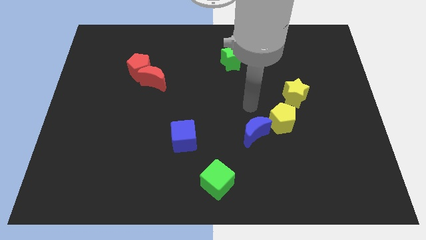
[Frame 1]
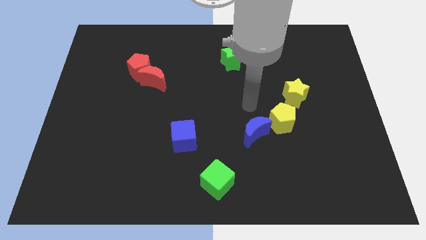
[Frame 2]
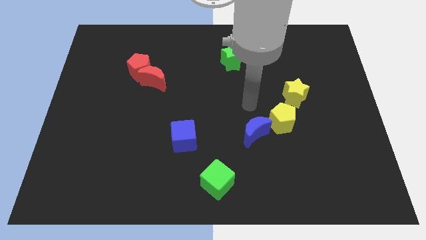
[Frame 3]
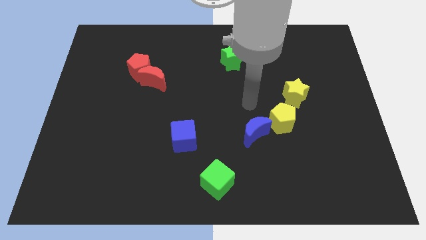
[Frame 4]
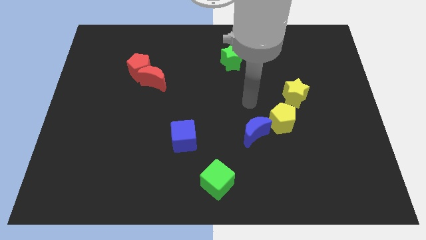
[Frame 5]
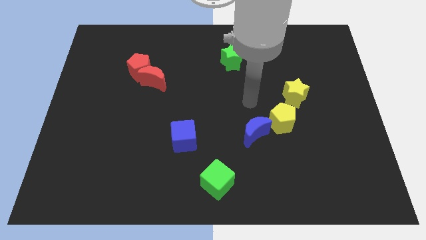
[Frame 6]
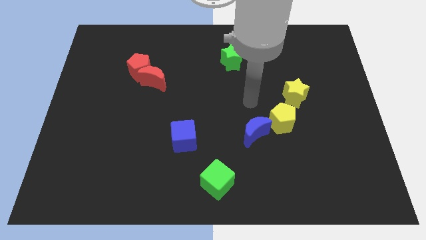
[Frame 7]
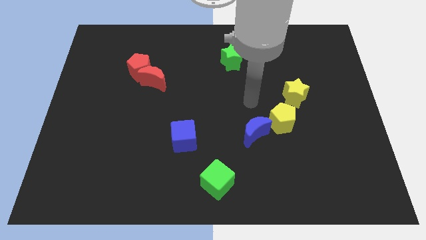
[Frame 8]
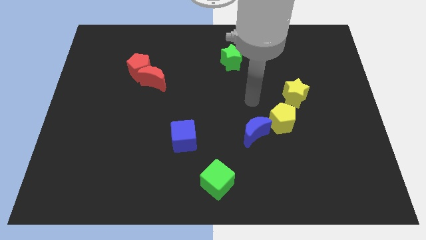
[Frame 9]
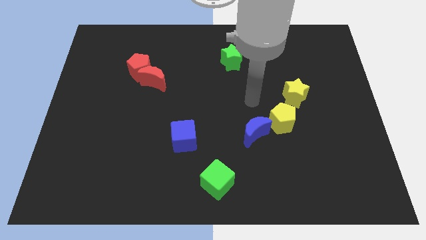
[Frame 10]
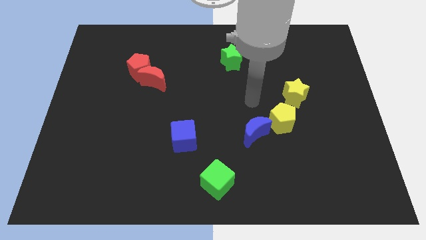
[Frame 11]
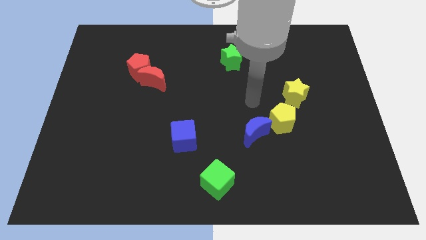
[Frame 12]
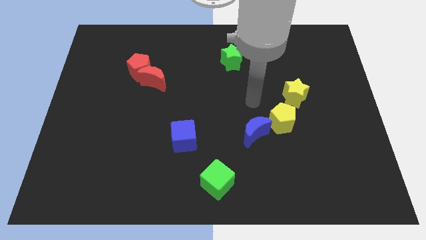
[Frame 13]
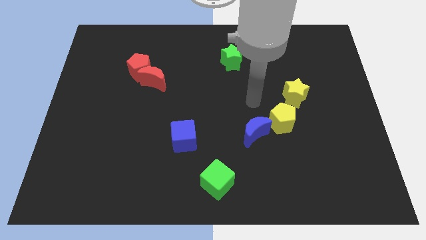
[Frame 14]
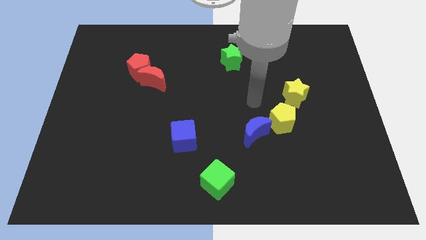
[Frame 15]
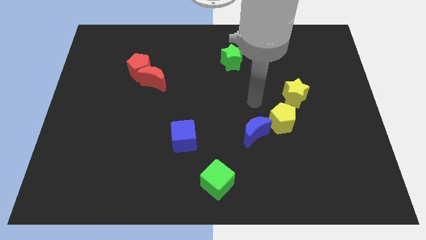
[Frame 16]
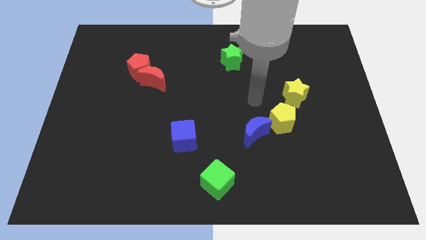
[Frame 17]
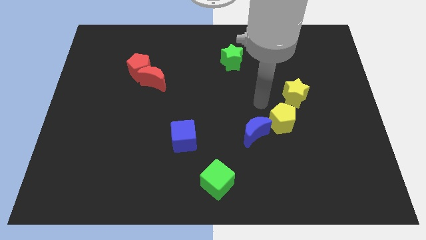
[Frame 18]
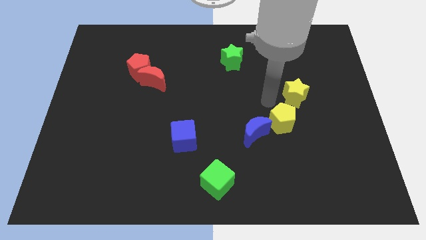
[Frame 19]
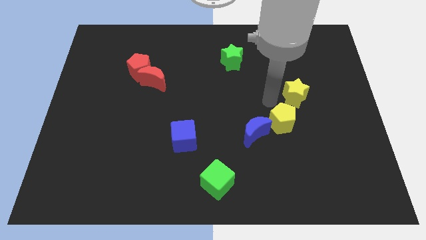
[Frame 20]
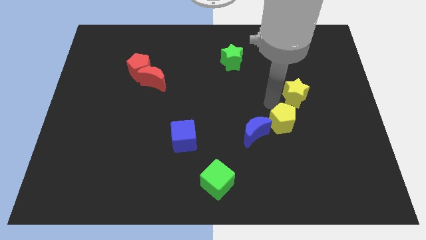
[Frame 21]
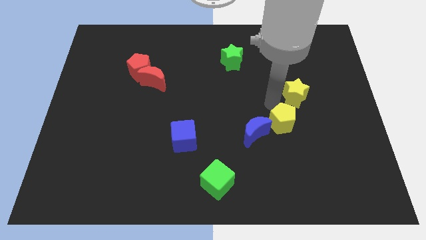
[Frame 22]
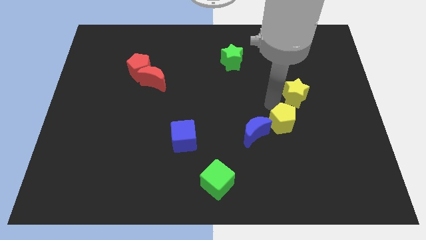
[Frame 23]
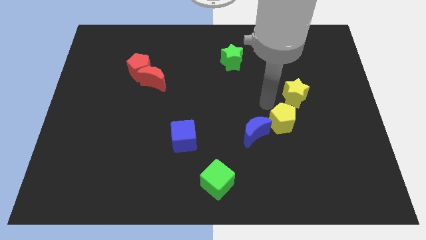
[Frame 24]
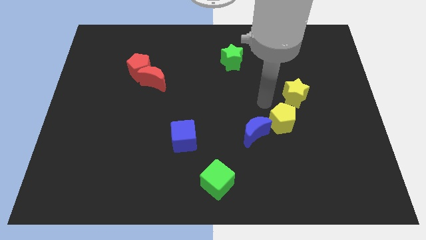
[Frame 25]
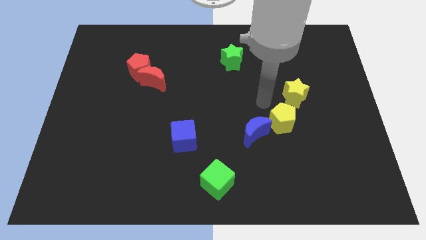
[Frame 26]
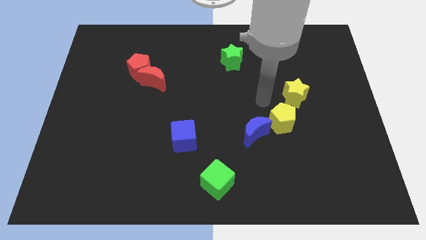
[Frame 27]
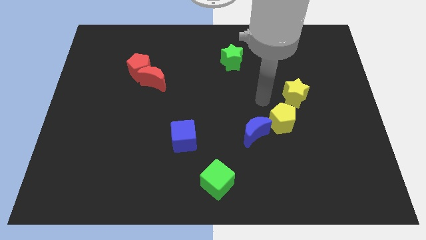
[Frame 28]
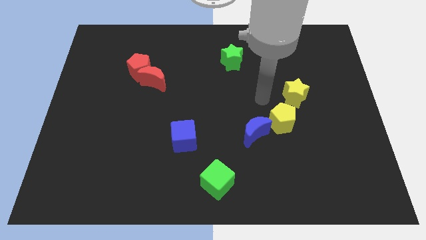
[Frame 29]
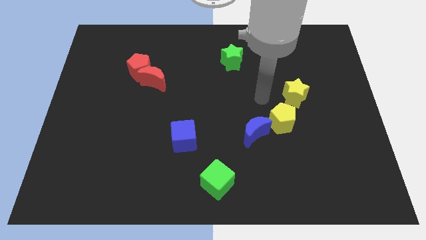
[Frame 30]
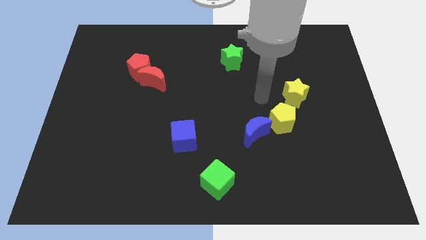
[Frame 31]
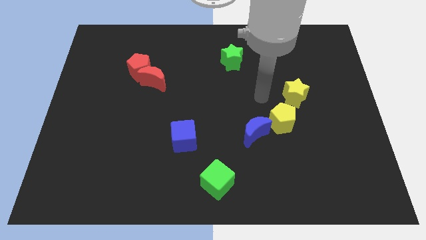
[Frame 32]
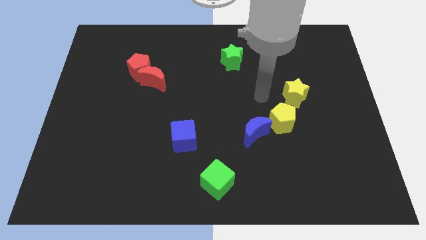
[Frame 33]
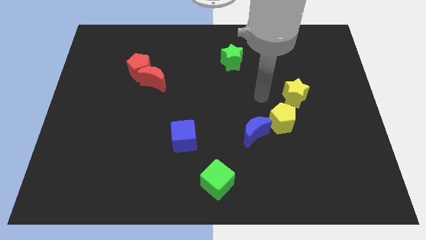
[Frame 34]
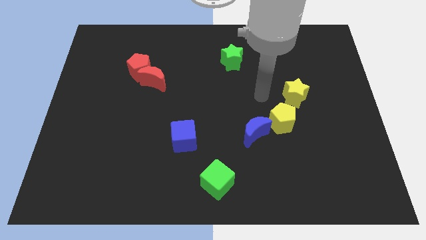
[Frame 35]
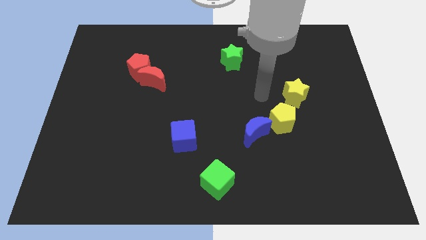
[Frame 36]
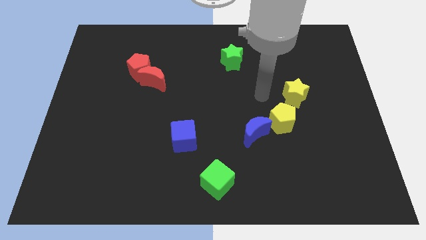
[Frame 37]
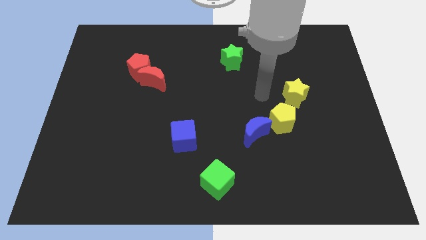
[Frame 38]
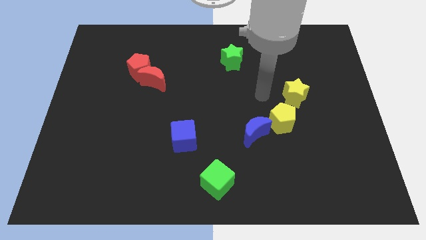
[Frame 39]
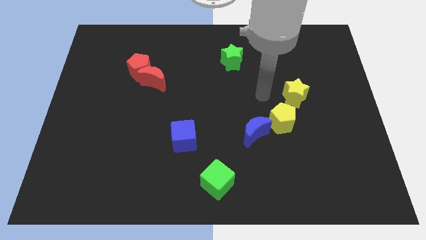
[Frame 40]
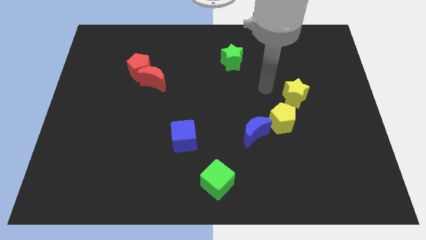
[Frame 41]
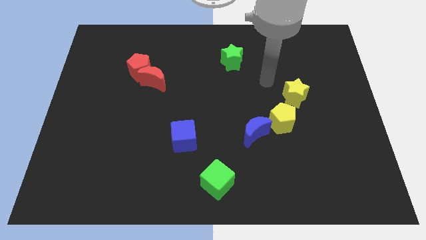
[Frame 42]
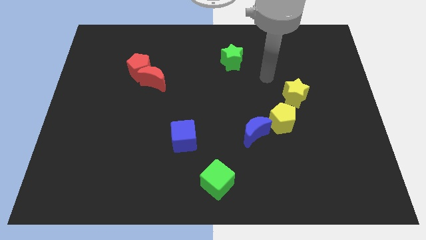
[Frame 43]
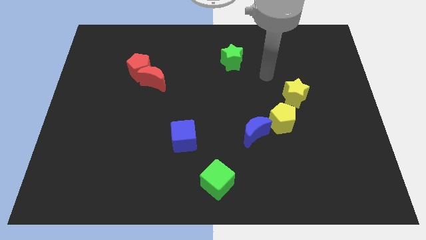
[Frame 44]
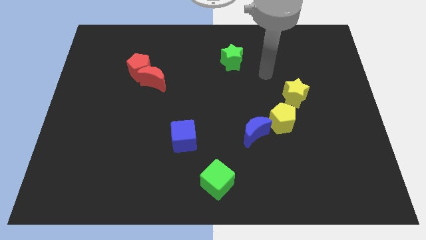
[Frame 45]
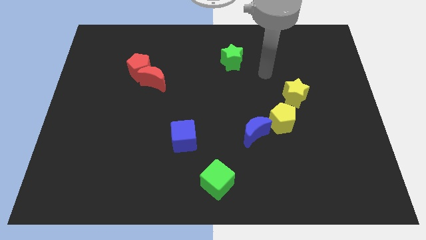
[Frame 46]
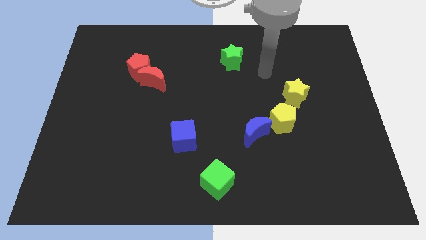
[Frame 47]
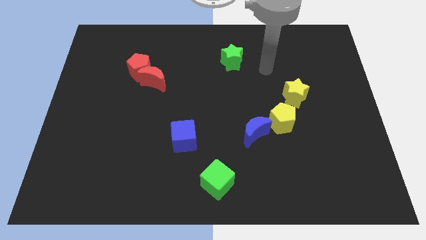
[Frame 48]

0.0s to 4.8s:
place your arm right to th green star

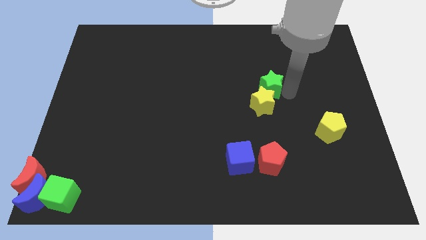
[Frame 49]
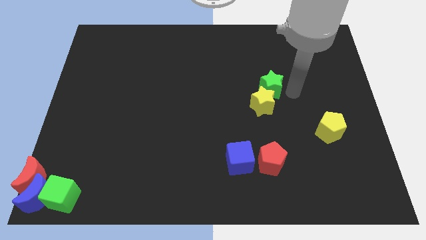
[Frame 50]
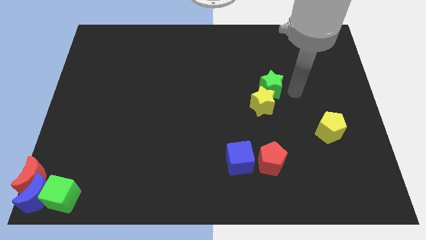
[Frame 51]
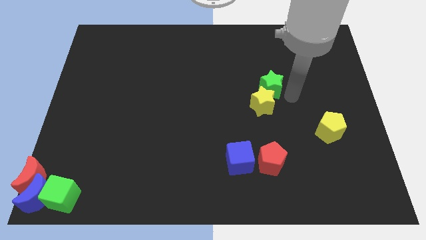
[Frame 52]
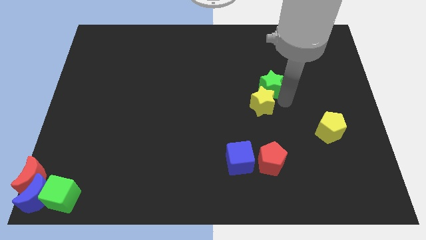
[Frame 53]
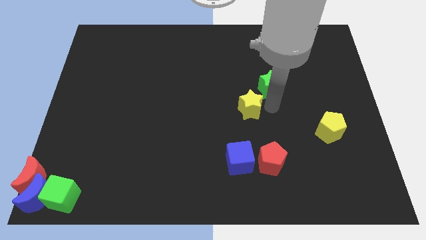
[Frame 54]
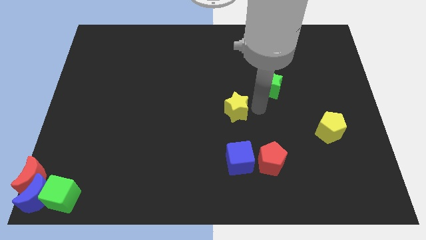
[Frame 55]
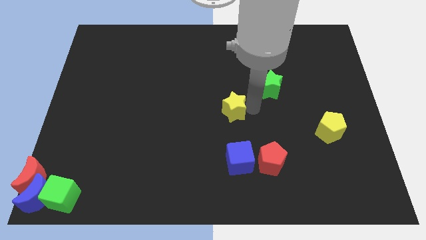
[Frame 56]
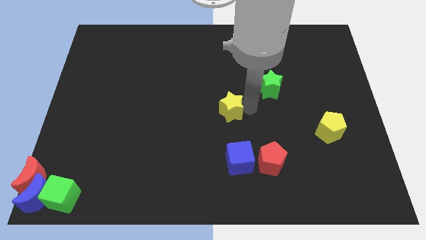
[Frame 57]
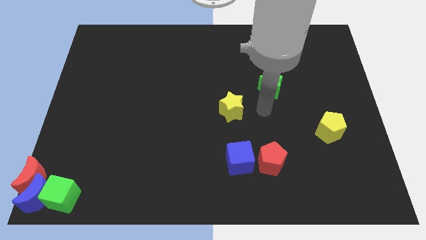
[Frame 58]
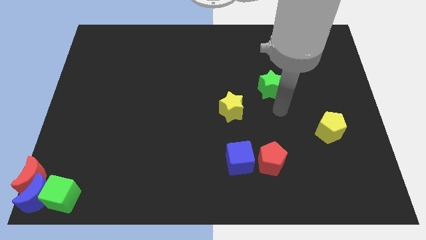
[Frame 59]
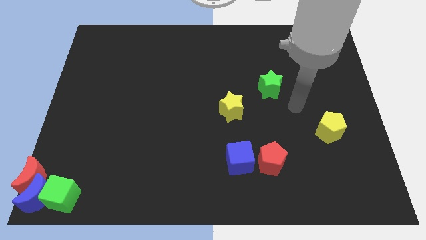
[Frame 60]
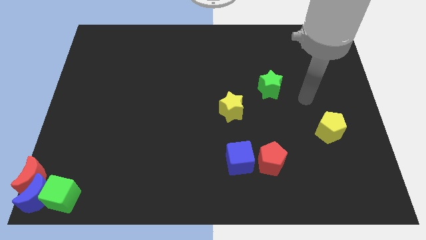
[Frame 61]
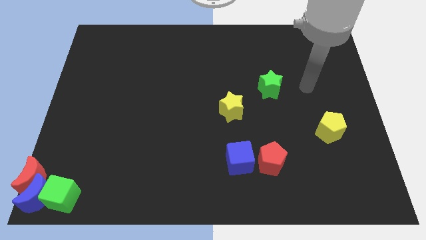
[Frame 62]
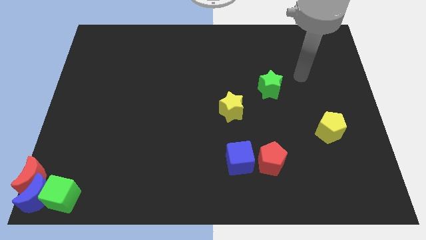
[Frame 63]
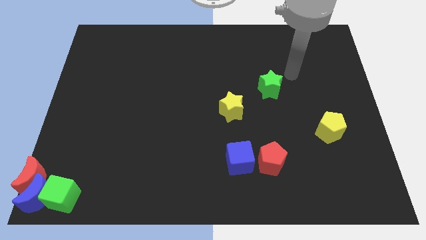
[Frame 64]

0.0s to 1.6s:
separate the yellow star from green star

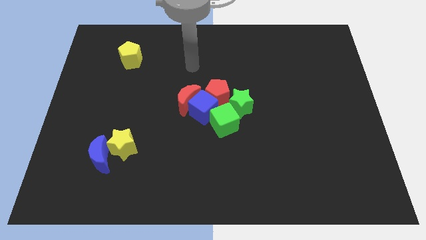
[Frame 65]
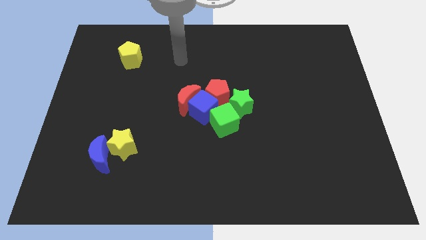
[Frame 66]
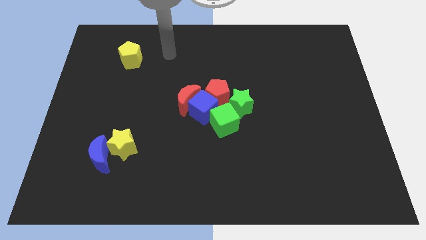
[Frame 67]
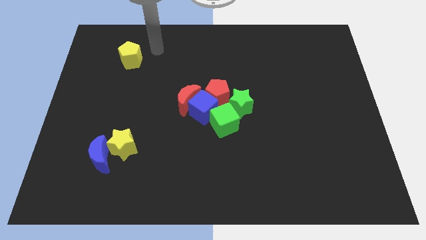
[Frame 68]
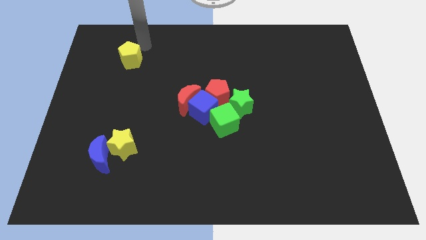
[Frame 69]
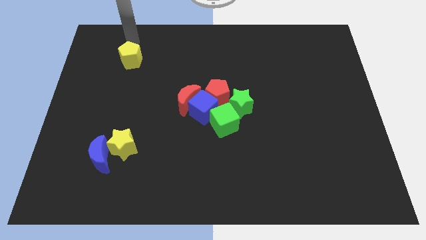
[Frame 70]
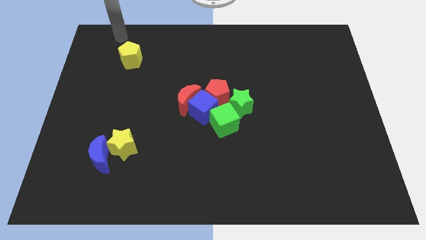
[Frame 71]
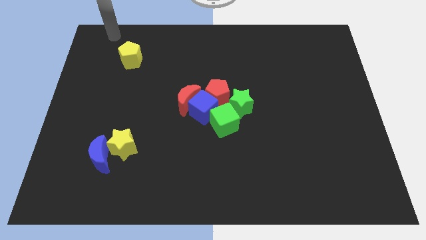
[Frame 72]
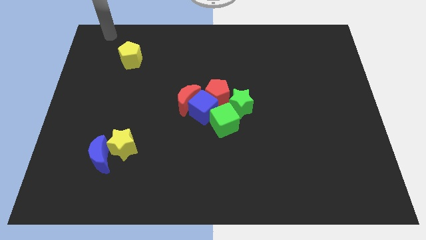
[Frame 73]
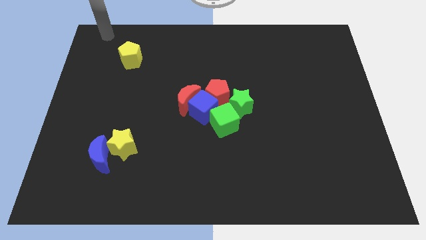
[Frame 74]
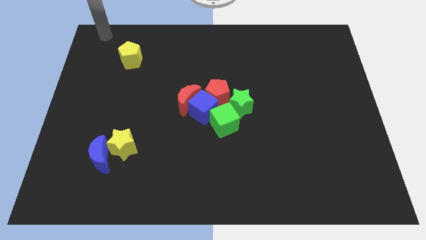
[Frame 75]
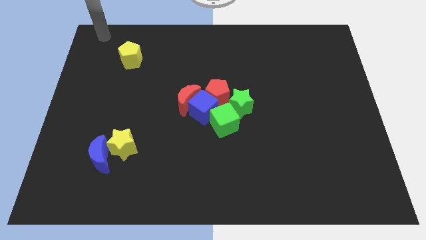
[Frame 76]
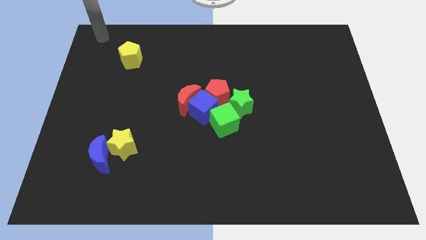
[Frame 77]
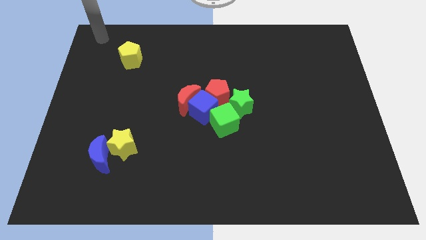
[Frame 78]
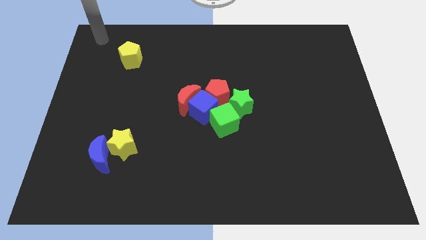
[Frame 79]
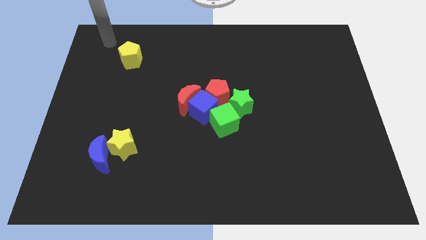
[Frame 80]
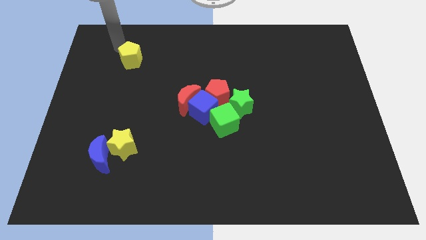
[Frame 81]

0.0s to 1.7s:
move your arm towards the yellow pentagon

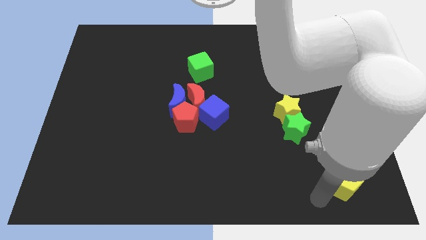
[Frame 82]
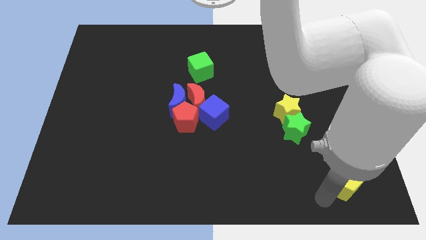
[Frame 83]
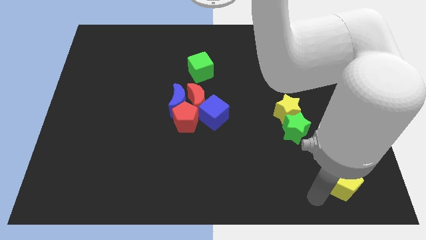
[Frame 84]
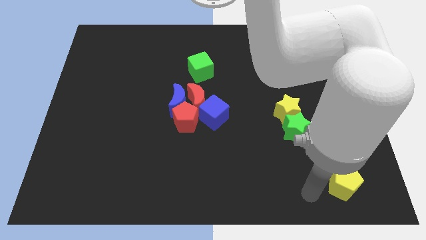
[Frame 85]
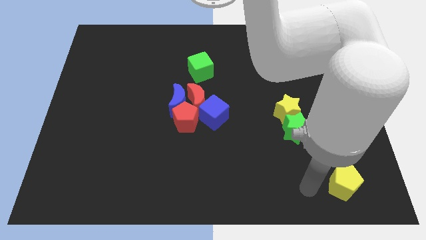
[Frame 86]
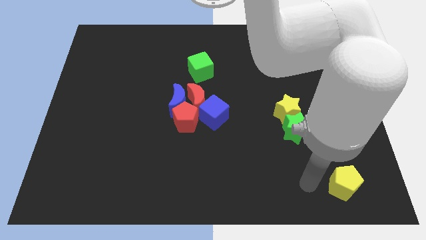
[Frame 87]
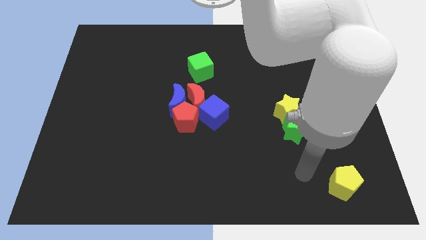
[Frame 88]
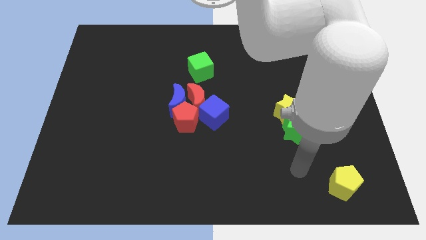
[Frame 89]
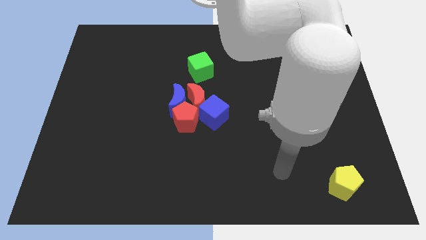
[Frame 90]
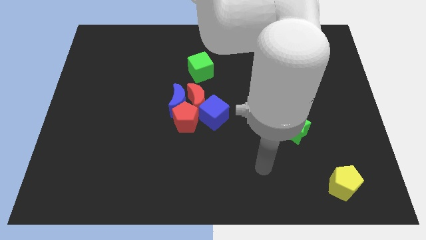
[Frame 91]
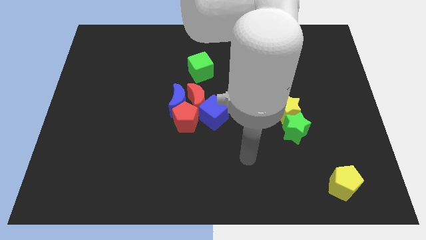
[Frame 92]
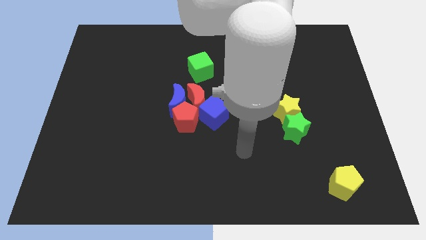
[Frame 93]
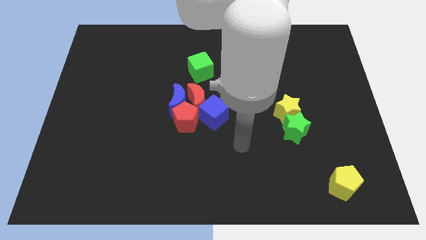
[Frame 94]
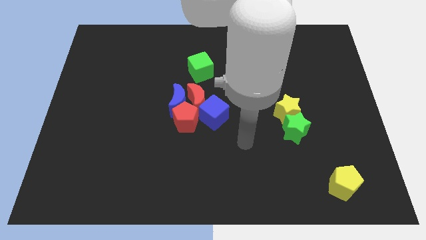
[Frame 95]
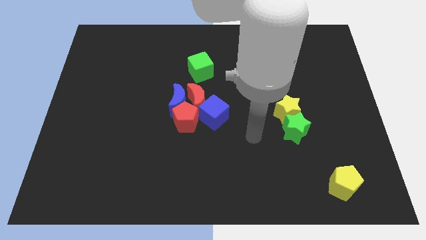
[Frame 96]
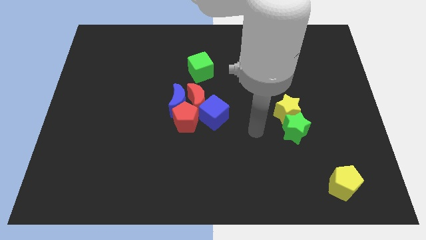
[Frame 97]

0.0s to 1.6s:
move the arm in between the blue cube and green star
